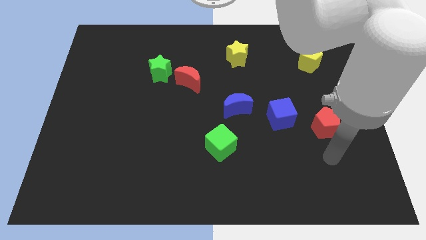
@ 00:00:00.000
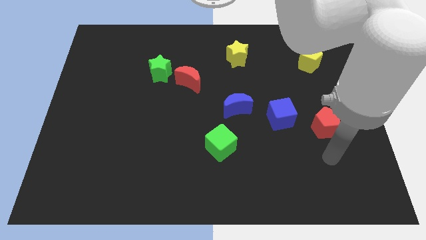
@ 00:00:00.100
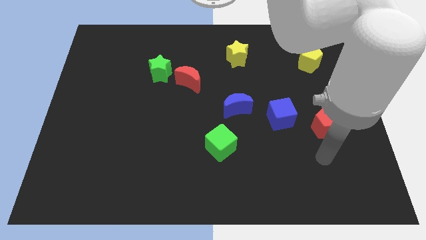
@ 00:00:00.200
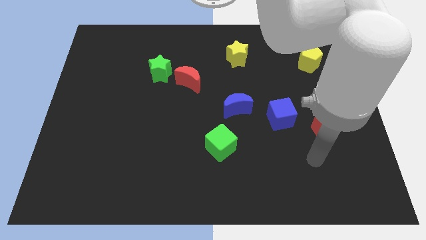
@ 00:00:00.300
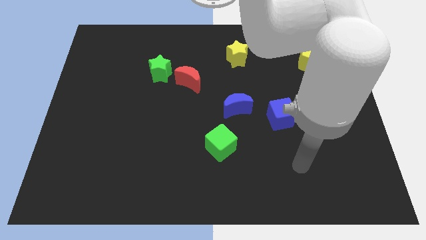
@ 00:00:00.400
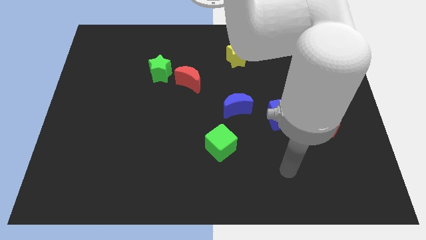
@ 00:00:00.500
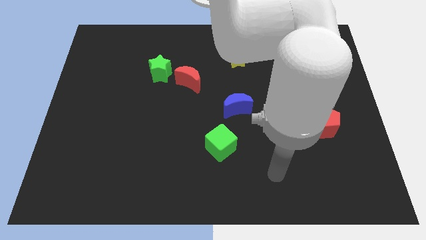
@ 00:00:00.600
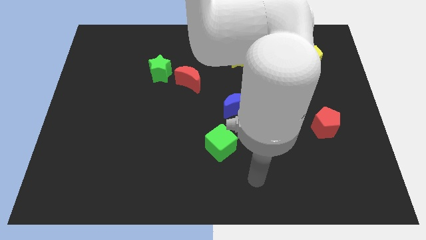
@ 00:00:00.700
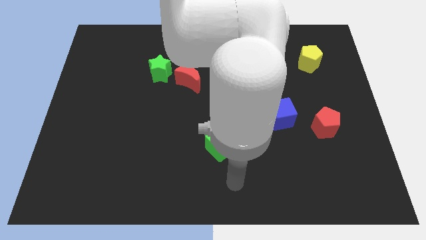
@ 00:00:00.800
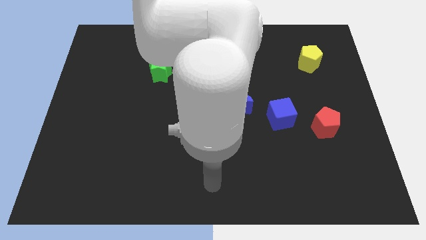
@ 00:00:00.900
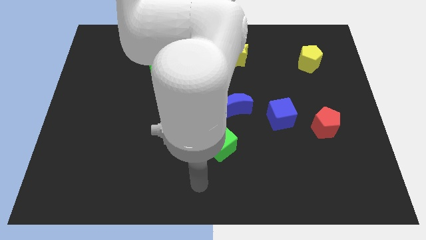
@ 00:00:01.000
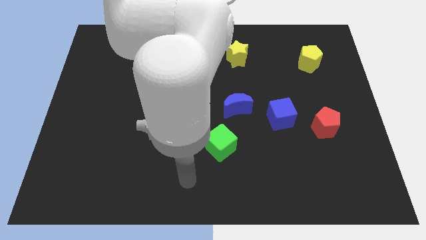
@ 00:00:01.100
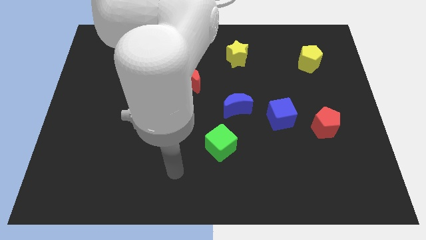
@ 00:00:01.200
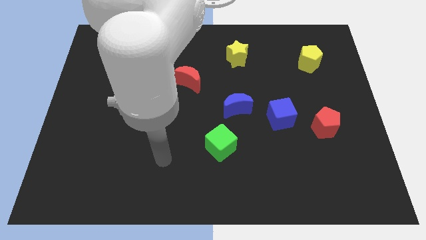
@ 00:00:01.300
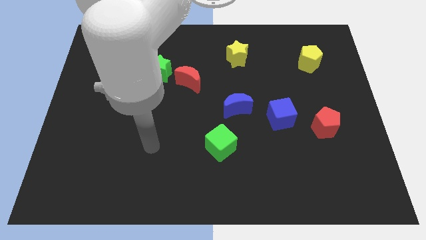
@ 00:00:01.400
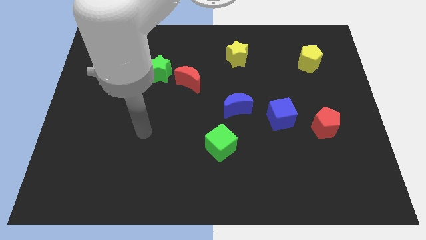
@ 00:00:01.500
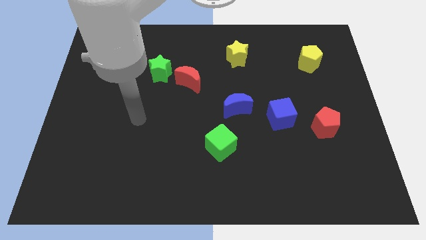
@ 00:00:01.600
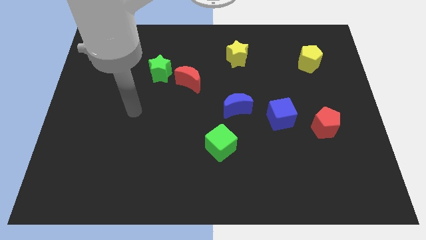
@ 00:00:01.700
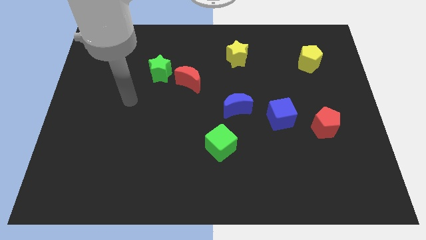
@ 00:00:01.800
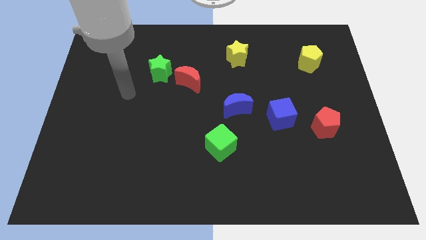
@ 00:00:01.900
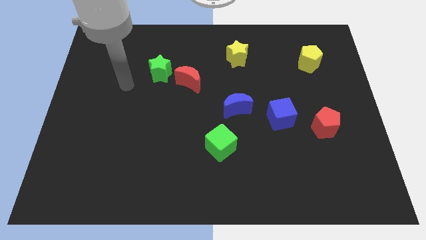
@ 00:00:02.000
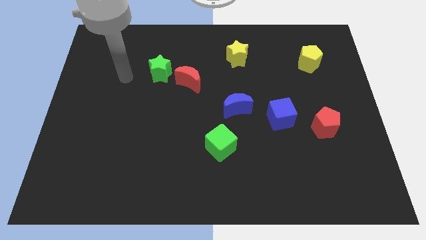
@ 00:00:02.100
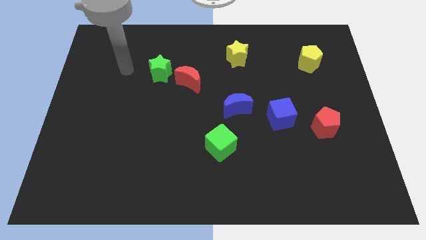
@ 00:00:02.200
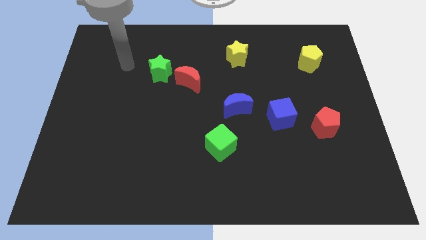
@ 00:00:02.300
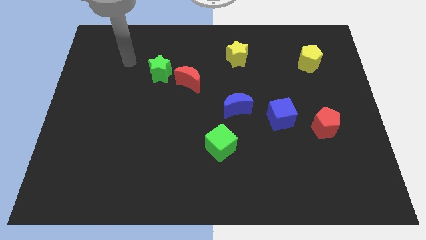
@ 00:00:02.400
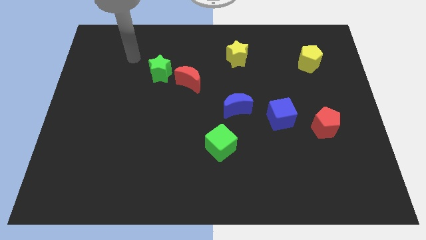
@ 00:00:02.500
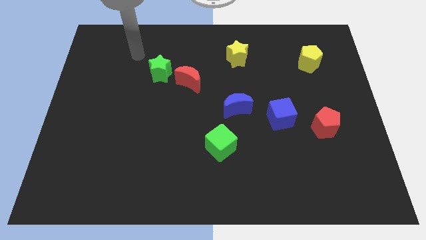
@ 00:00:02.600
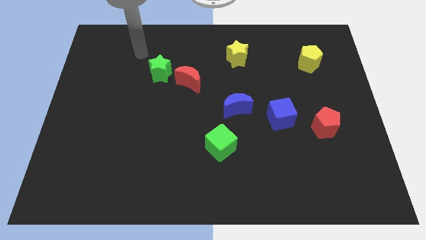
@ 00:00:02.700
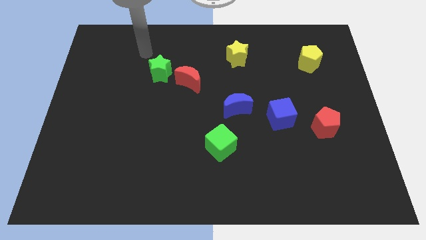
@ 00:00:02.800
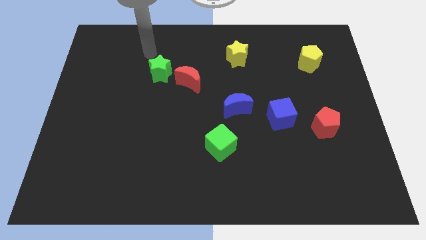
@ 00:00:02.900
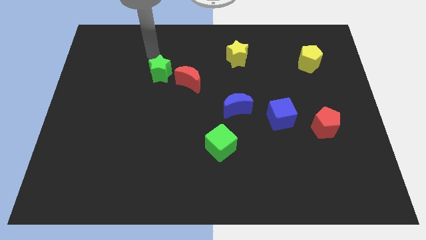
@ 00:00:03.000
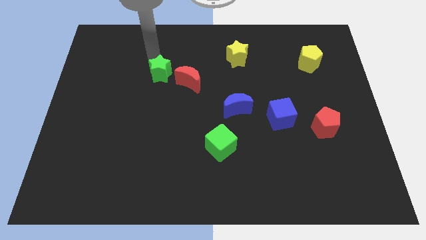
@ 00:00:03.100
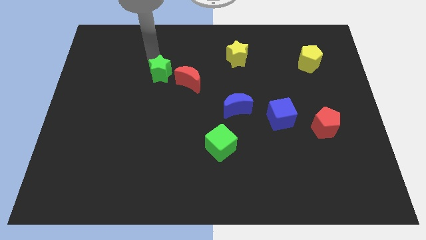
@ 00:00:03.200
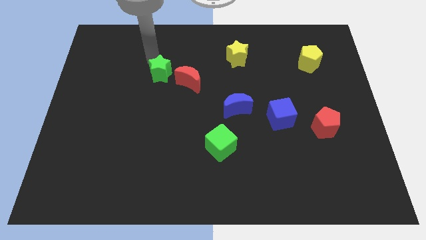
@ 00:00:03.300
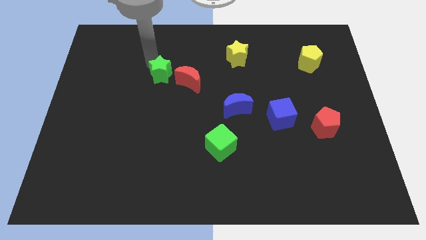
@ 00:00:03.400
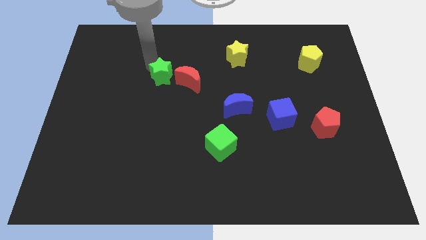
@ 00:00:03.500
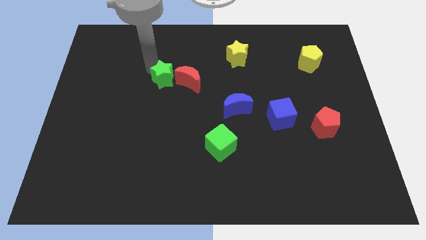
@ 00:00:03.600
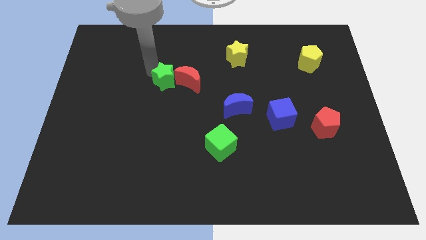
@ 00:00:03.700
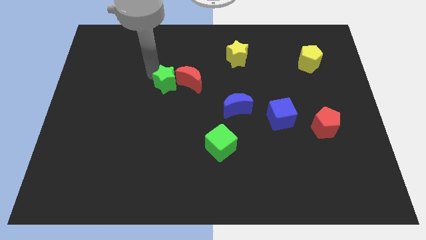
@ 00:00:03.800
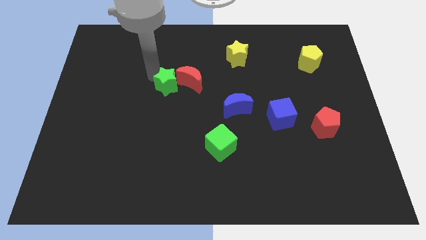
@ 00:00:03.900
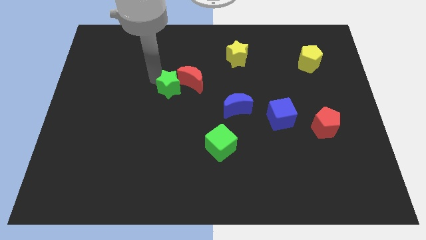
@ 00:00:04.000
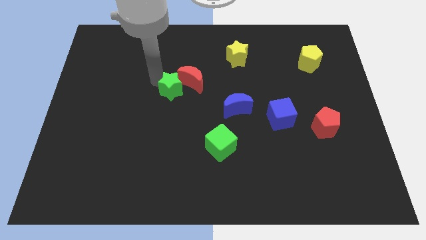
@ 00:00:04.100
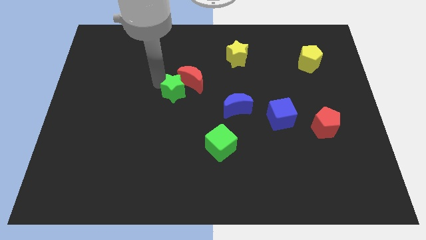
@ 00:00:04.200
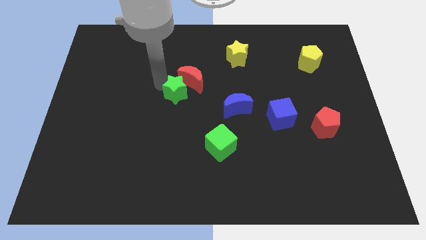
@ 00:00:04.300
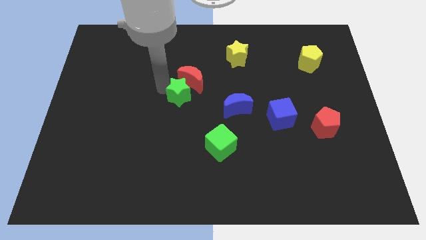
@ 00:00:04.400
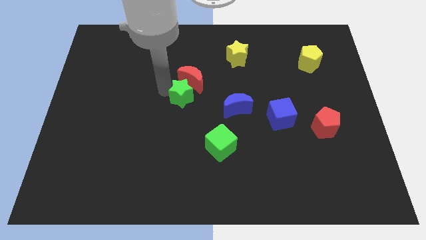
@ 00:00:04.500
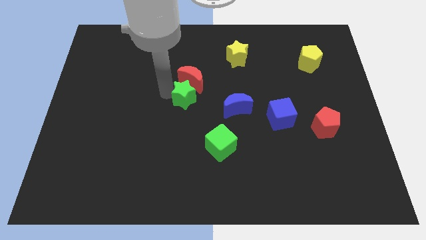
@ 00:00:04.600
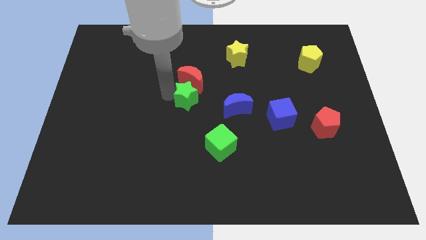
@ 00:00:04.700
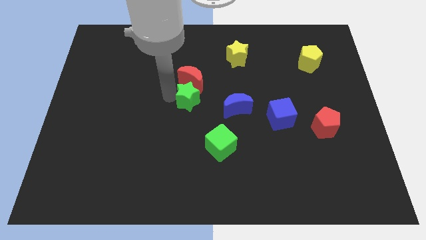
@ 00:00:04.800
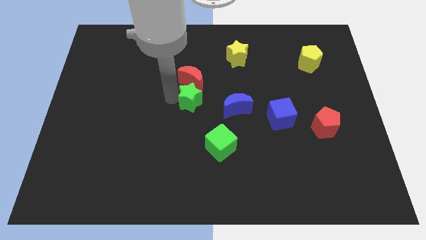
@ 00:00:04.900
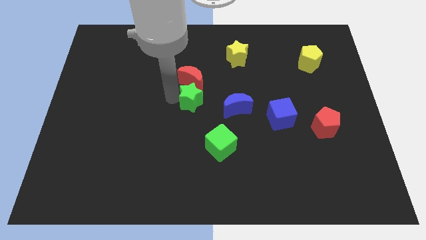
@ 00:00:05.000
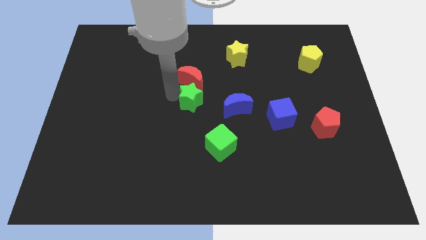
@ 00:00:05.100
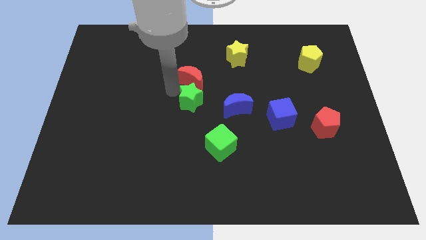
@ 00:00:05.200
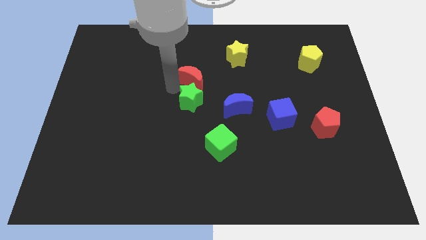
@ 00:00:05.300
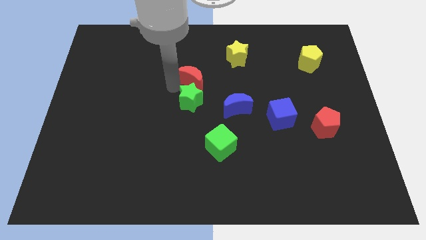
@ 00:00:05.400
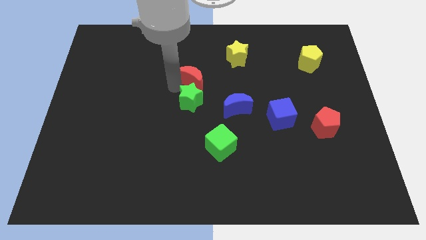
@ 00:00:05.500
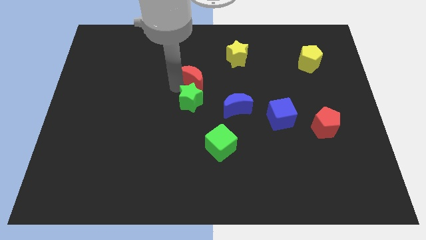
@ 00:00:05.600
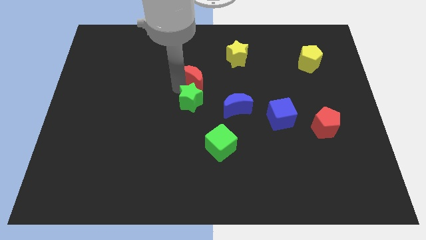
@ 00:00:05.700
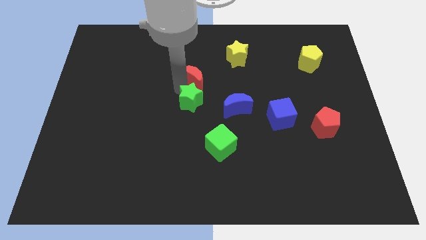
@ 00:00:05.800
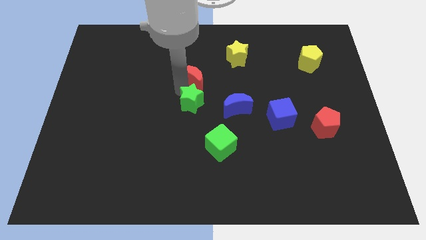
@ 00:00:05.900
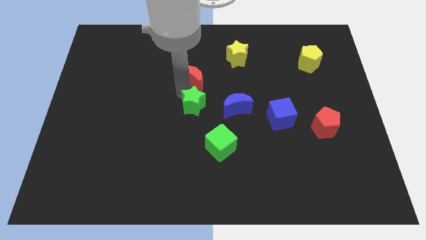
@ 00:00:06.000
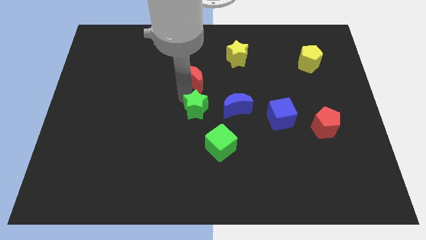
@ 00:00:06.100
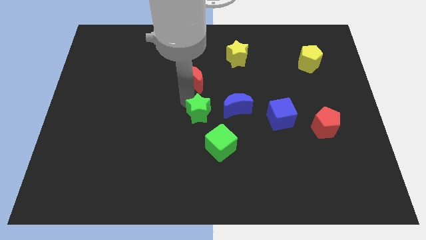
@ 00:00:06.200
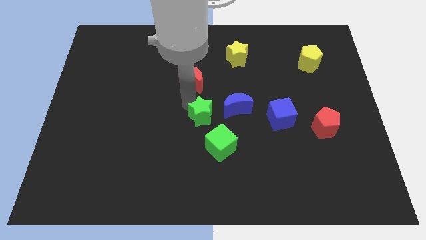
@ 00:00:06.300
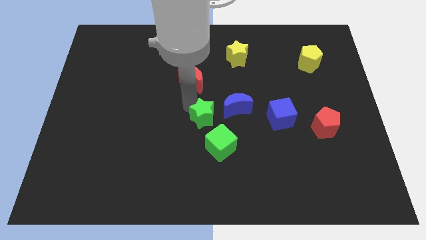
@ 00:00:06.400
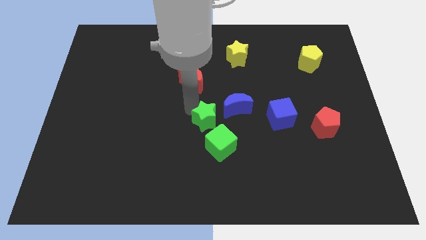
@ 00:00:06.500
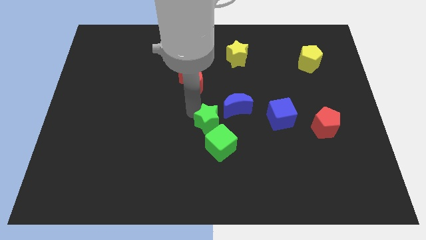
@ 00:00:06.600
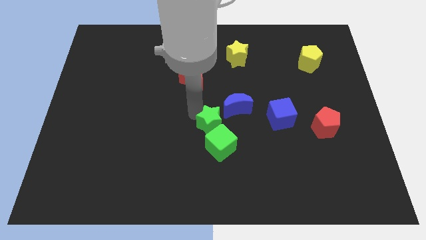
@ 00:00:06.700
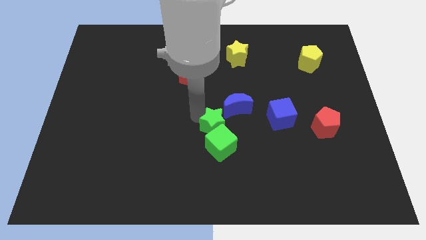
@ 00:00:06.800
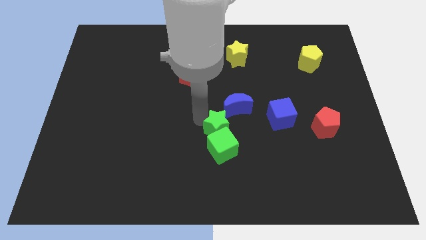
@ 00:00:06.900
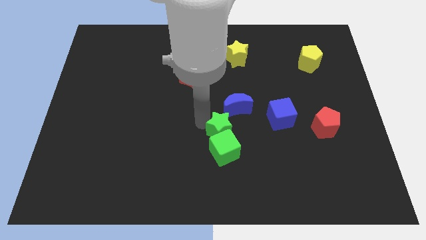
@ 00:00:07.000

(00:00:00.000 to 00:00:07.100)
push the green star to the green cube

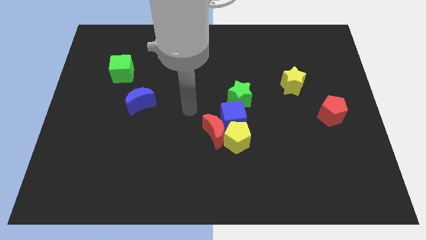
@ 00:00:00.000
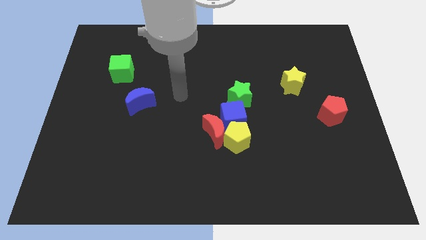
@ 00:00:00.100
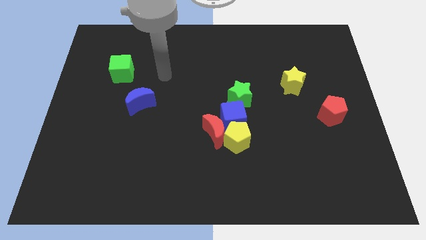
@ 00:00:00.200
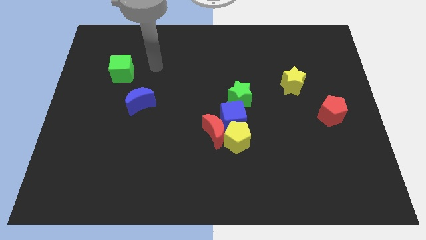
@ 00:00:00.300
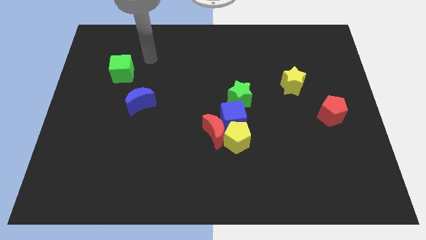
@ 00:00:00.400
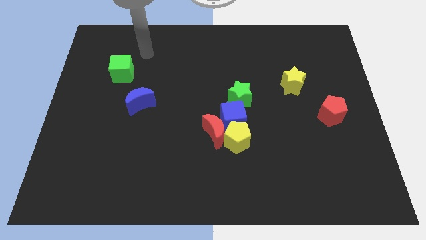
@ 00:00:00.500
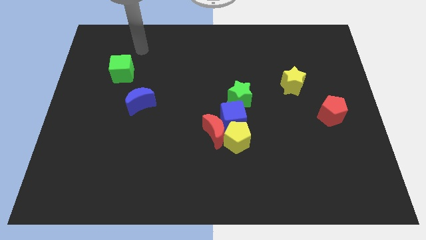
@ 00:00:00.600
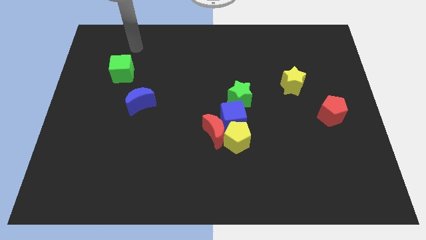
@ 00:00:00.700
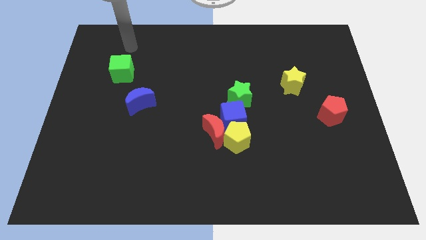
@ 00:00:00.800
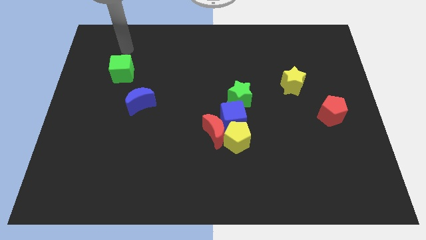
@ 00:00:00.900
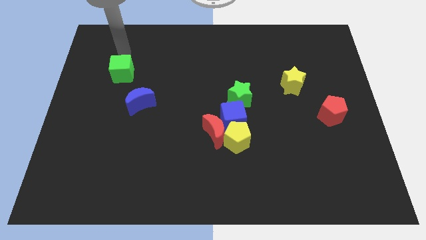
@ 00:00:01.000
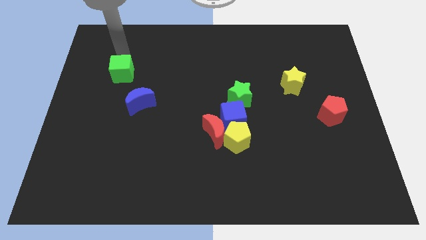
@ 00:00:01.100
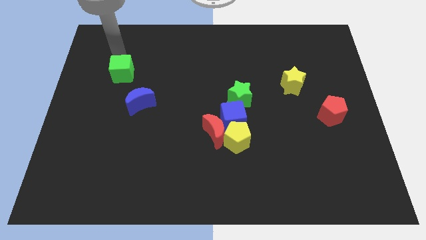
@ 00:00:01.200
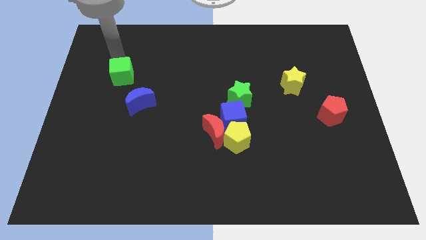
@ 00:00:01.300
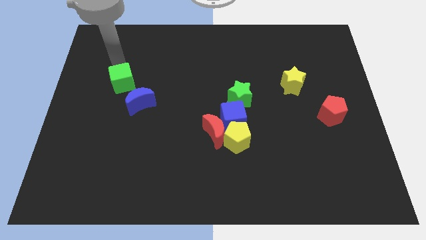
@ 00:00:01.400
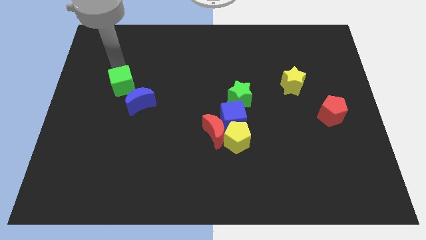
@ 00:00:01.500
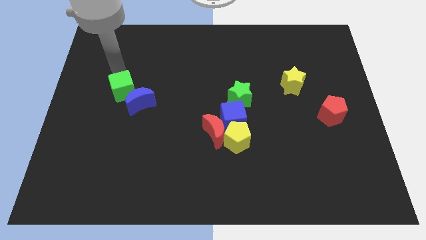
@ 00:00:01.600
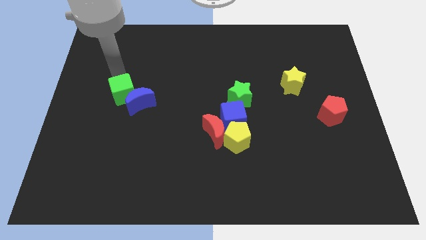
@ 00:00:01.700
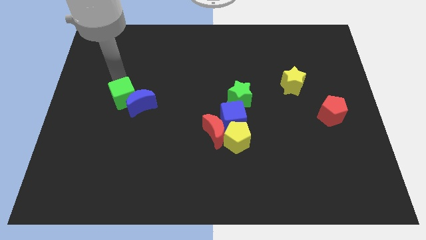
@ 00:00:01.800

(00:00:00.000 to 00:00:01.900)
put the green cube to the blue moon
